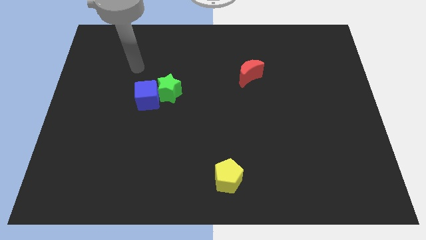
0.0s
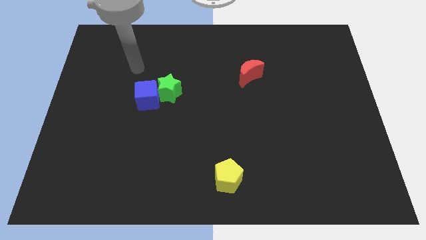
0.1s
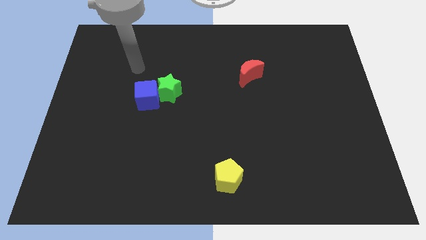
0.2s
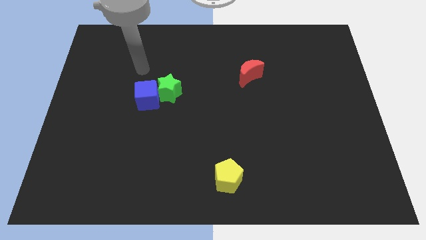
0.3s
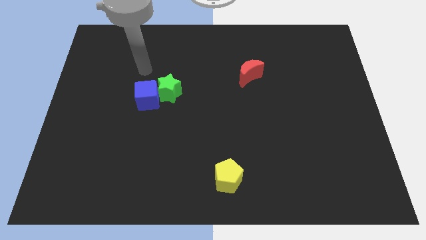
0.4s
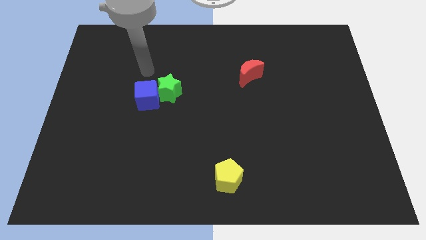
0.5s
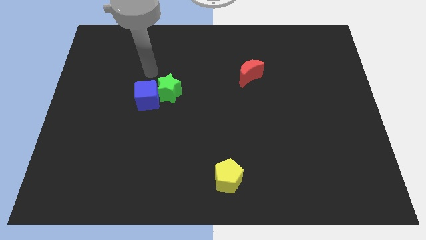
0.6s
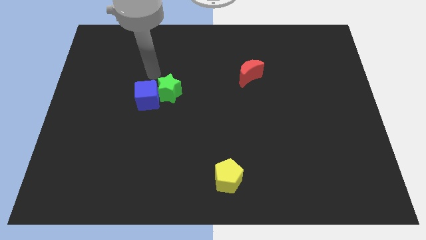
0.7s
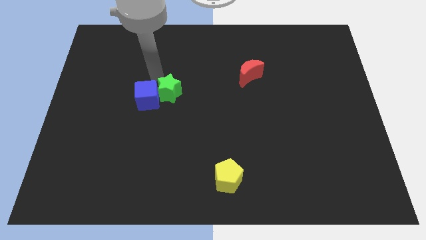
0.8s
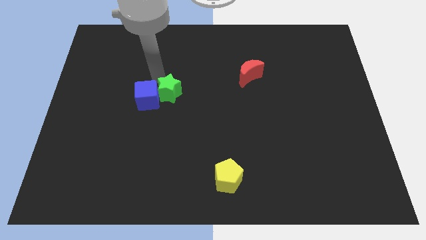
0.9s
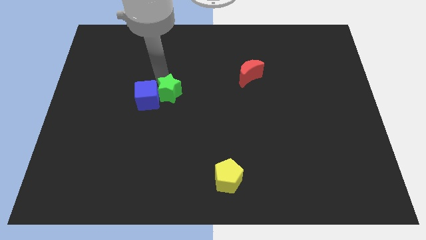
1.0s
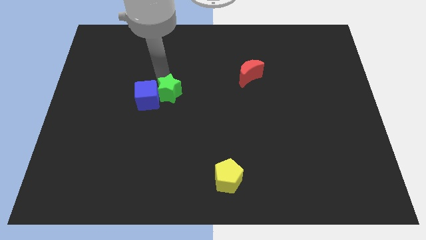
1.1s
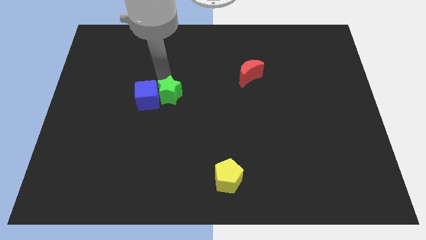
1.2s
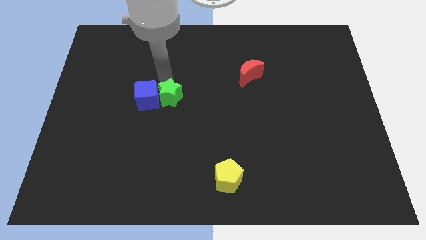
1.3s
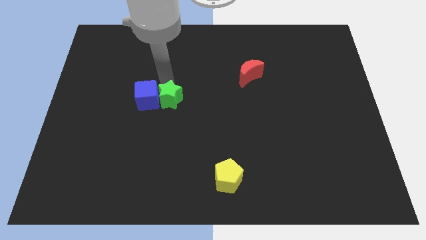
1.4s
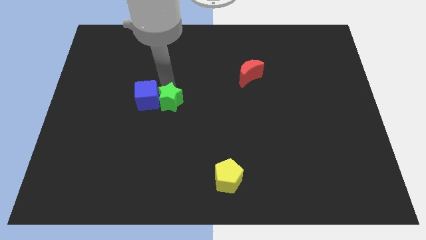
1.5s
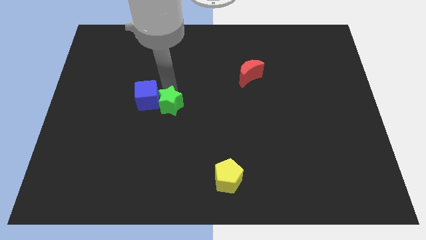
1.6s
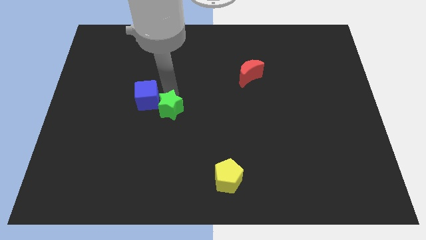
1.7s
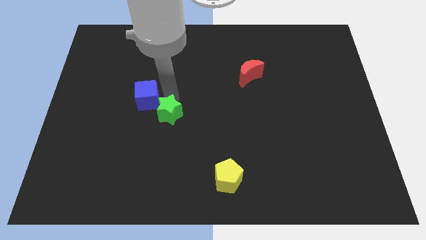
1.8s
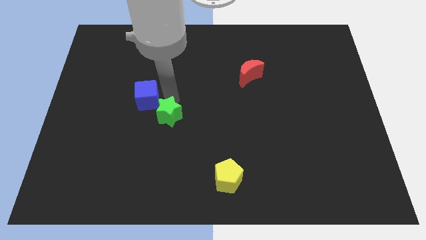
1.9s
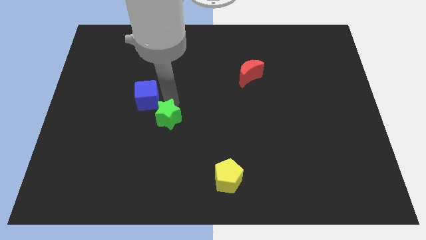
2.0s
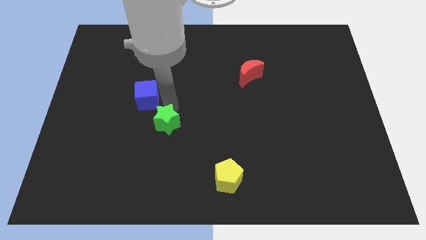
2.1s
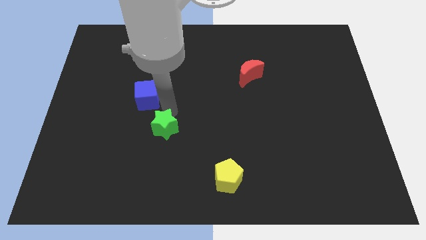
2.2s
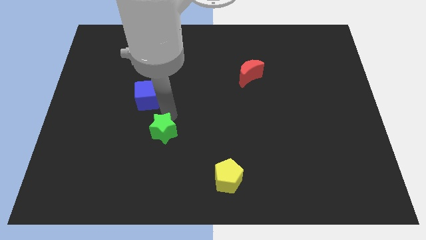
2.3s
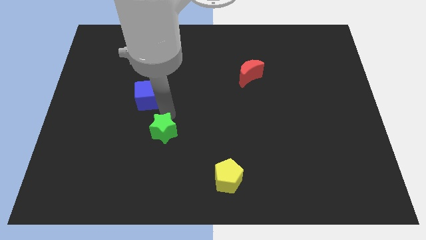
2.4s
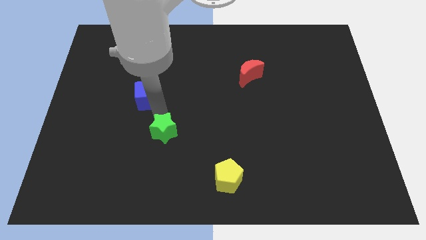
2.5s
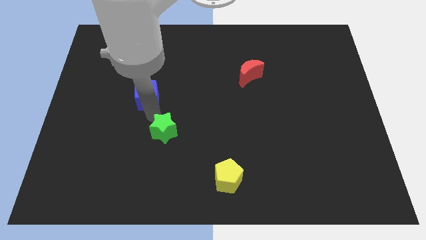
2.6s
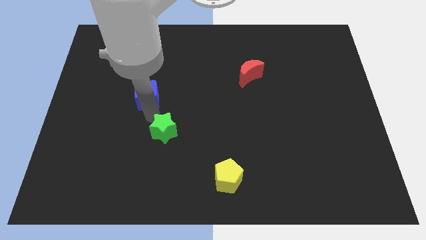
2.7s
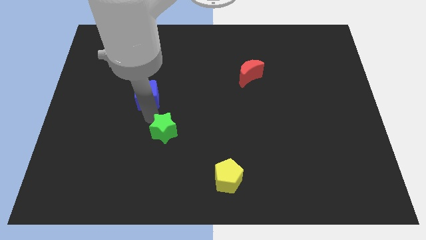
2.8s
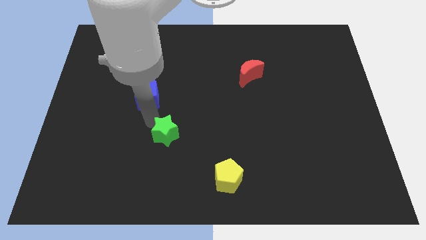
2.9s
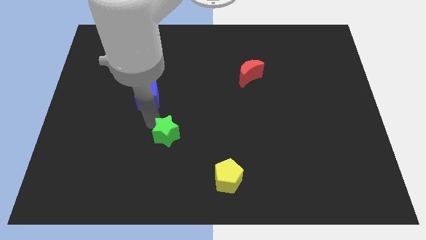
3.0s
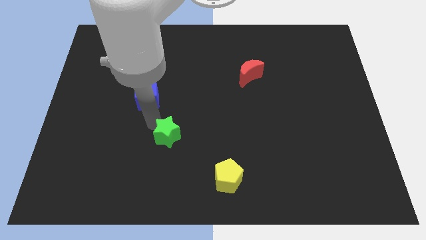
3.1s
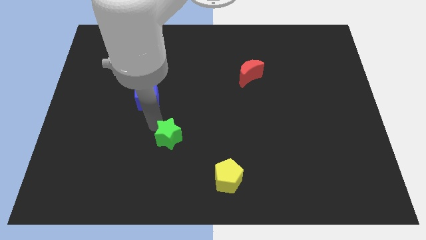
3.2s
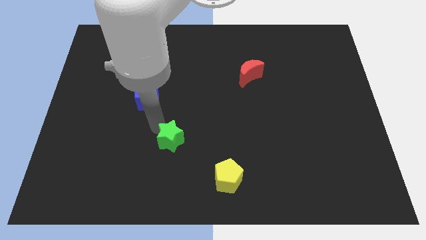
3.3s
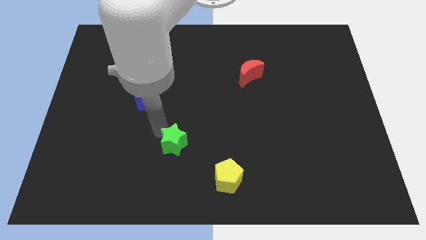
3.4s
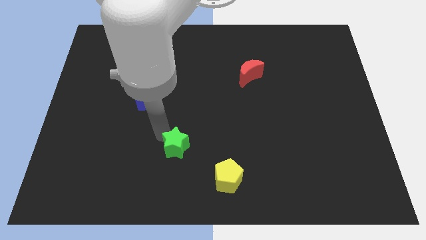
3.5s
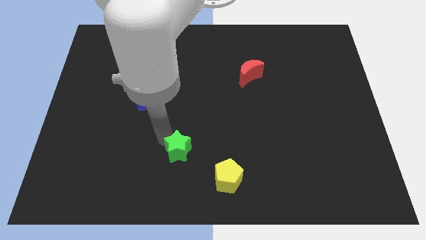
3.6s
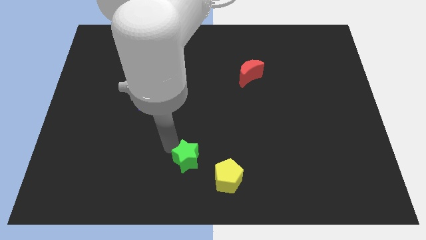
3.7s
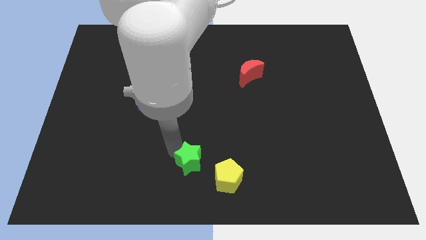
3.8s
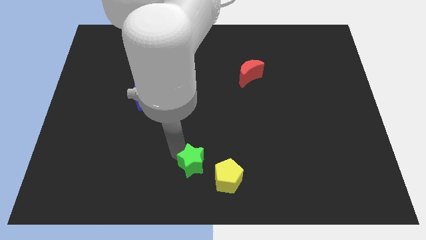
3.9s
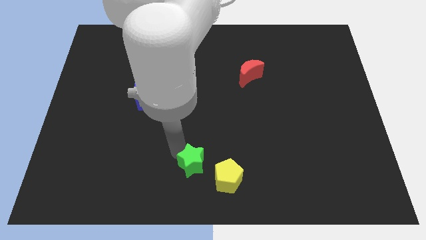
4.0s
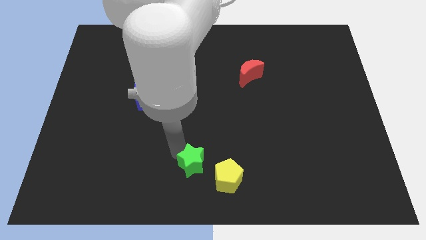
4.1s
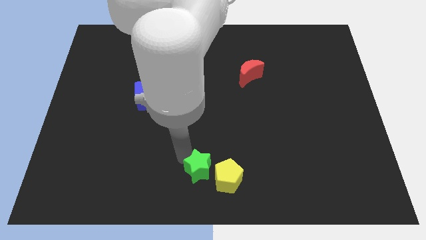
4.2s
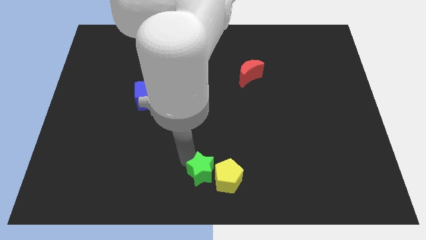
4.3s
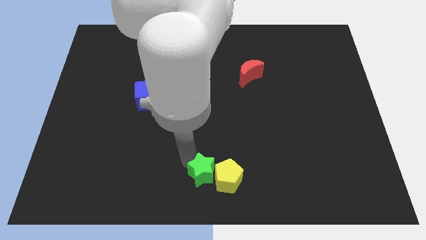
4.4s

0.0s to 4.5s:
slide the green block close to the yellow pentagon

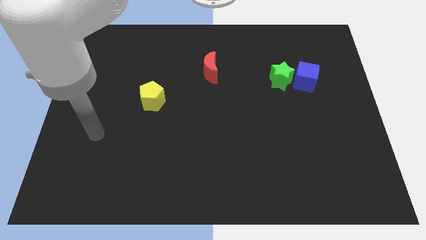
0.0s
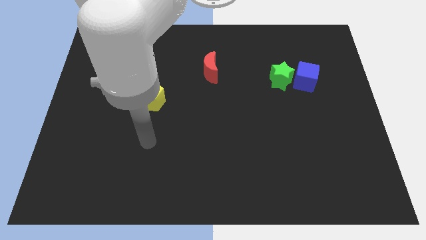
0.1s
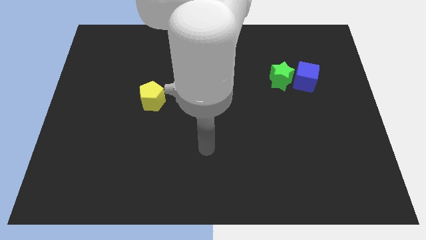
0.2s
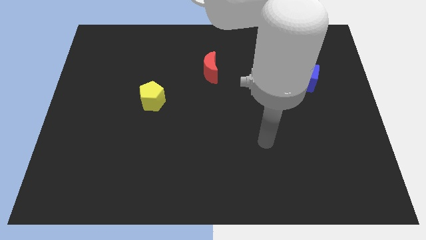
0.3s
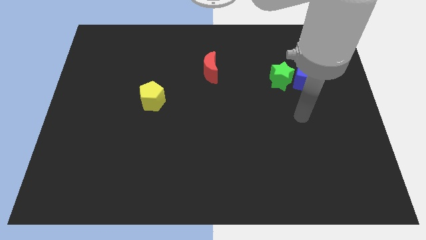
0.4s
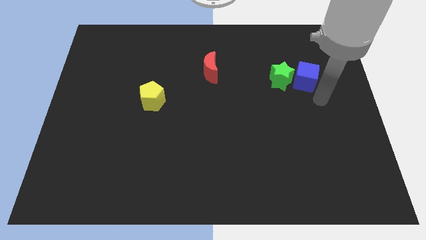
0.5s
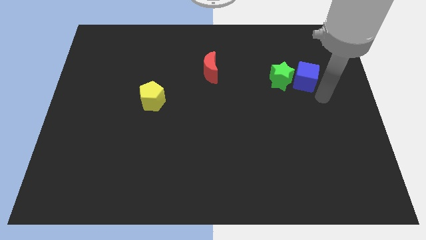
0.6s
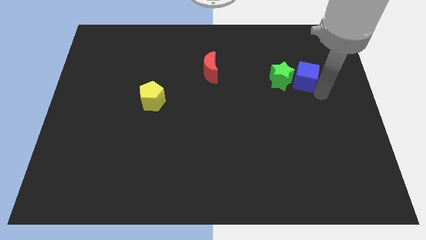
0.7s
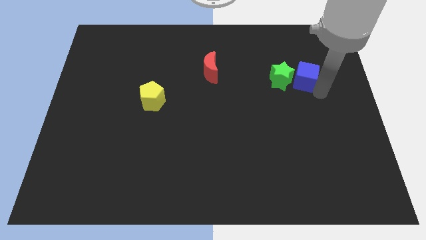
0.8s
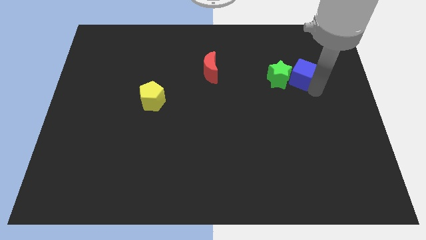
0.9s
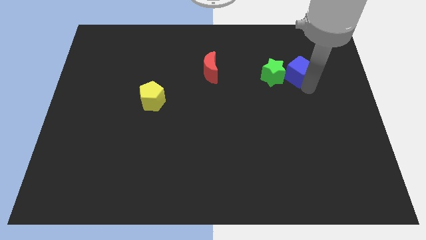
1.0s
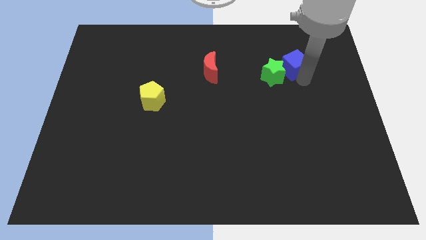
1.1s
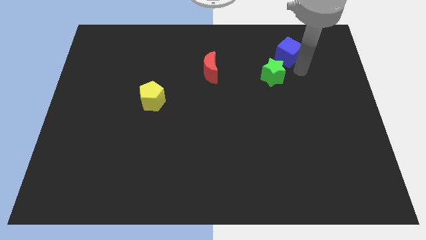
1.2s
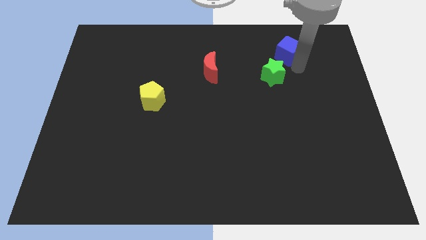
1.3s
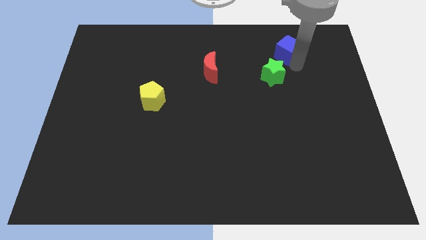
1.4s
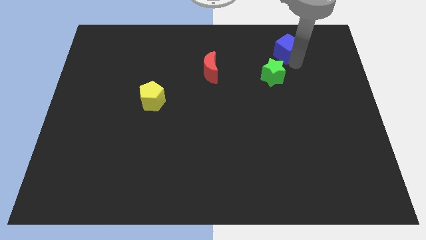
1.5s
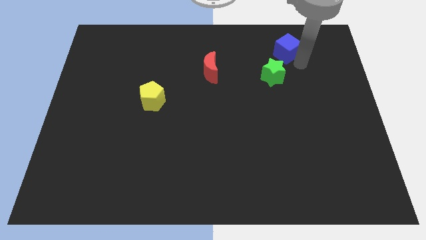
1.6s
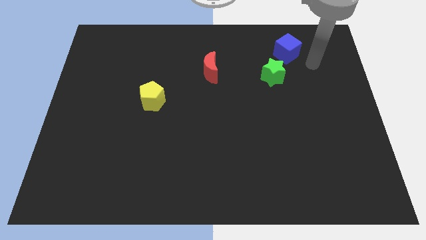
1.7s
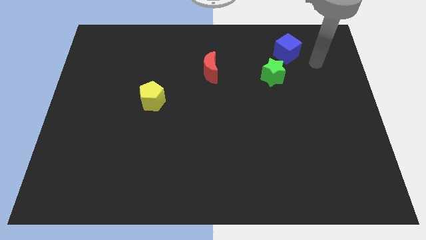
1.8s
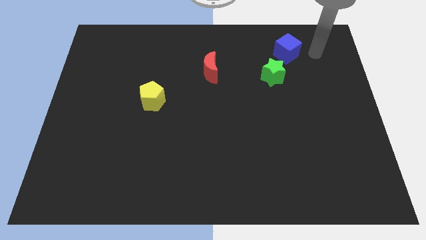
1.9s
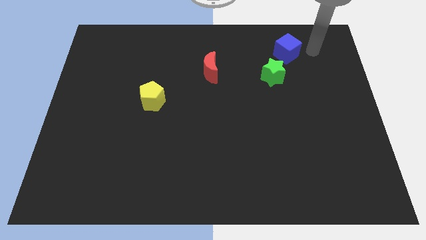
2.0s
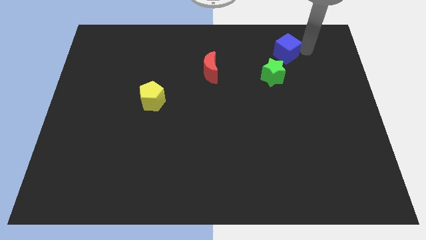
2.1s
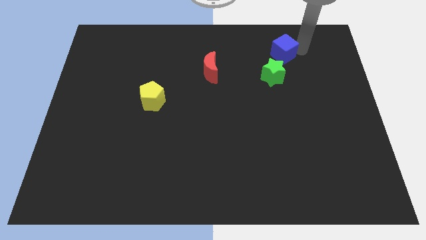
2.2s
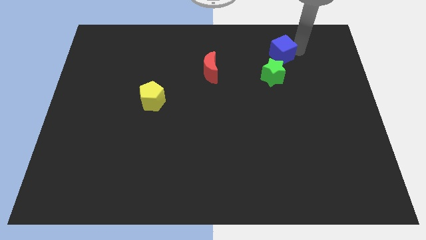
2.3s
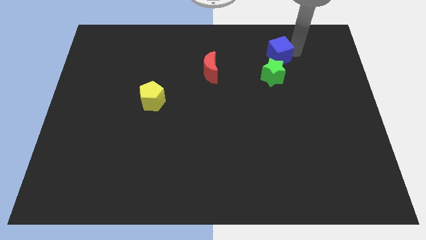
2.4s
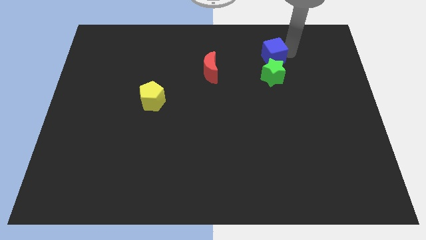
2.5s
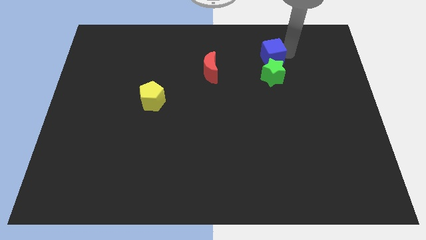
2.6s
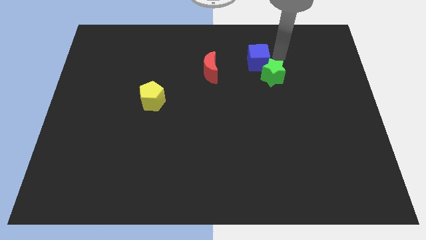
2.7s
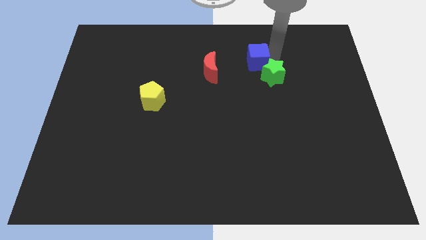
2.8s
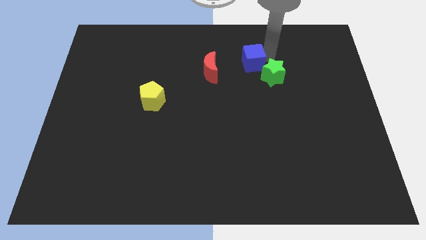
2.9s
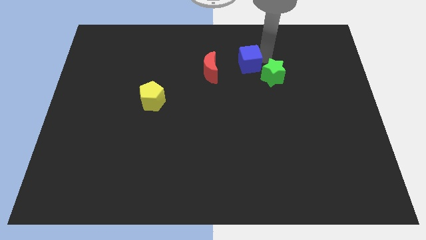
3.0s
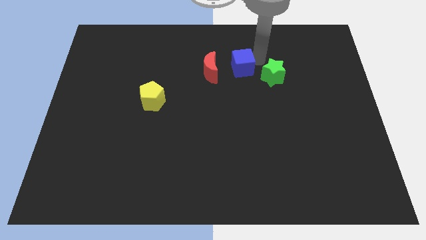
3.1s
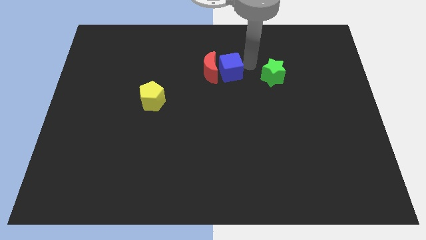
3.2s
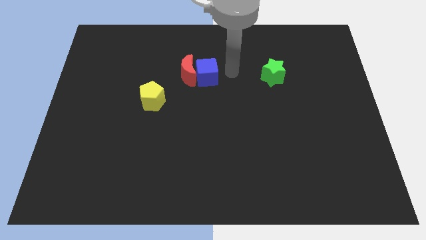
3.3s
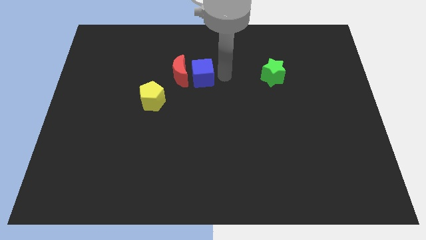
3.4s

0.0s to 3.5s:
put the blue block towards the red block

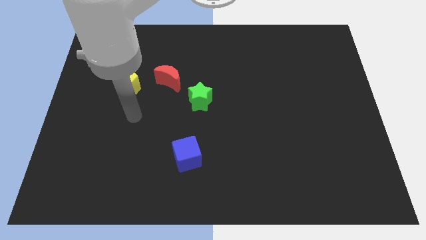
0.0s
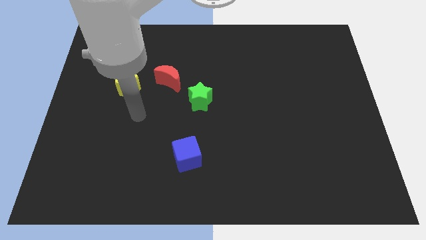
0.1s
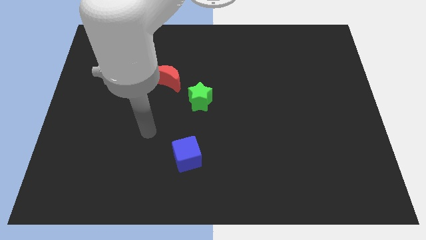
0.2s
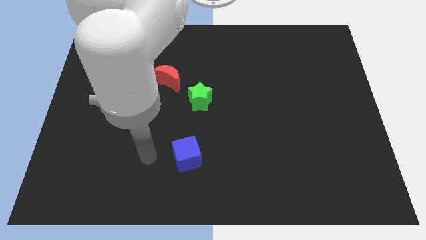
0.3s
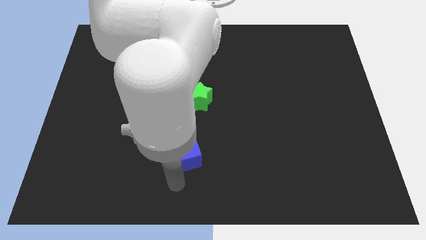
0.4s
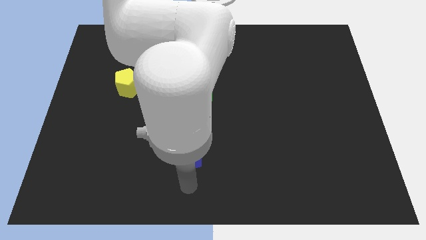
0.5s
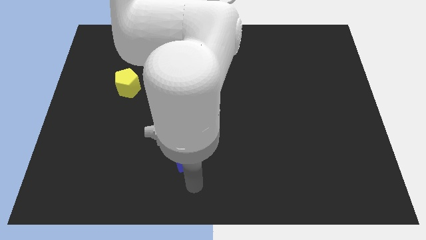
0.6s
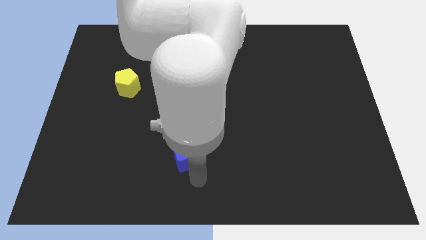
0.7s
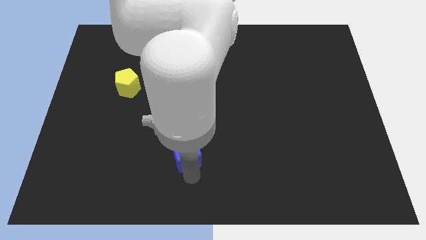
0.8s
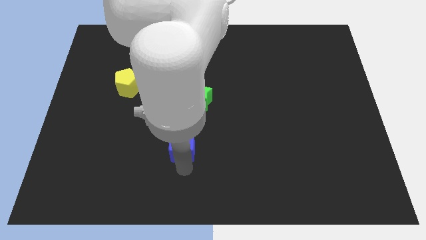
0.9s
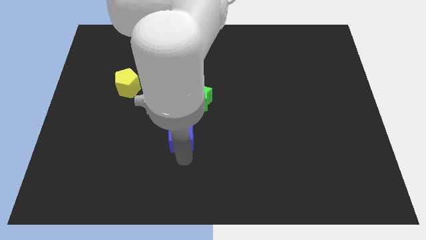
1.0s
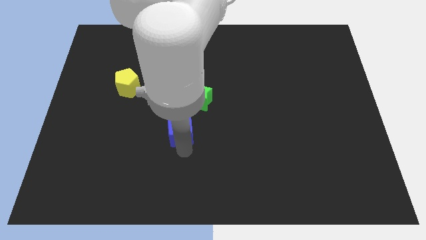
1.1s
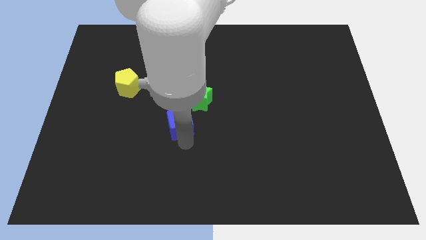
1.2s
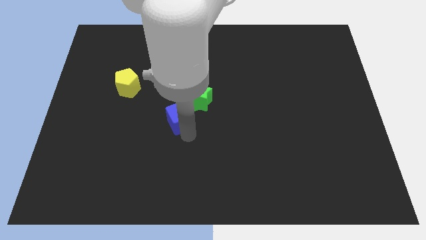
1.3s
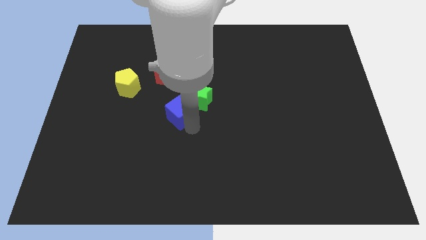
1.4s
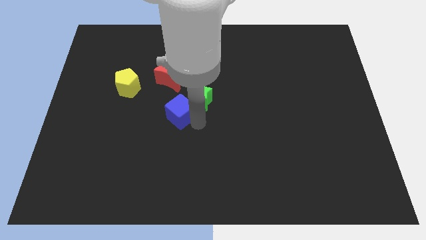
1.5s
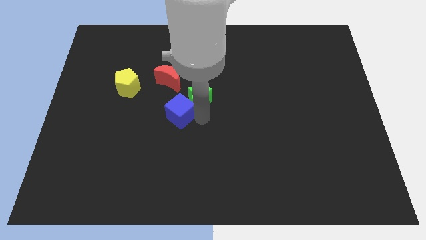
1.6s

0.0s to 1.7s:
put the blue cube to the green star
